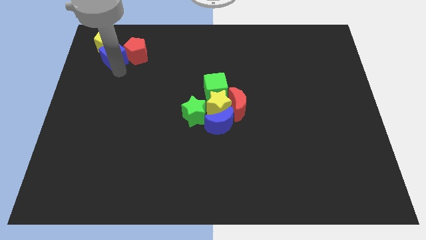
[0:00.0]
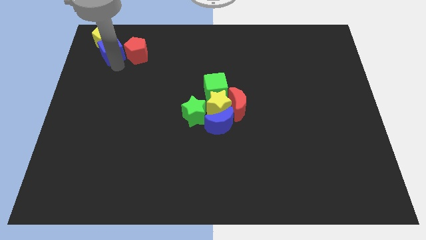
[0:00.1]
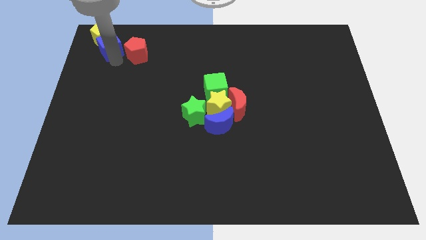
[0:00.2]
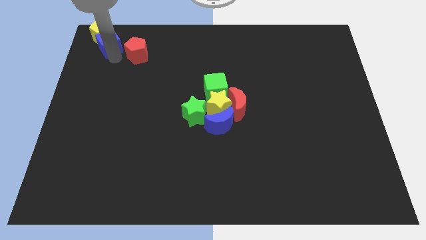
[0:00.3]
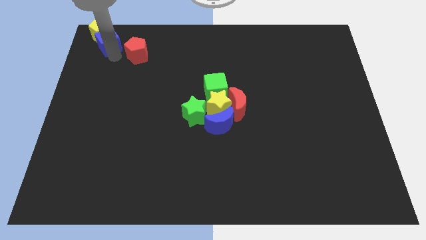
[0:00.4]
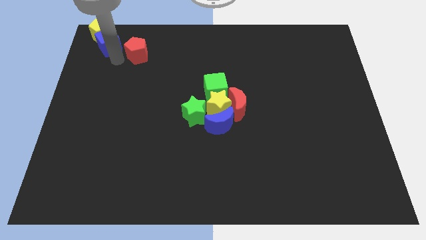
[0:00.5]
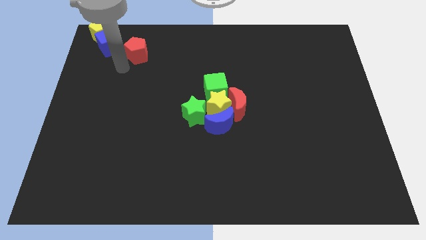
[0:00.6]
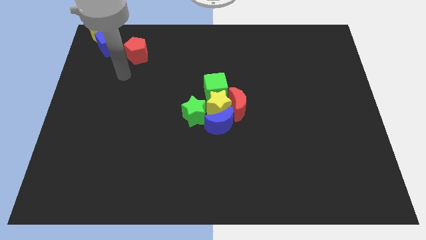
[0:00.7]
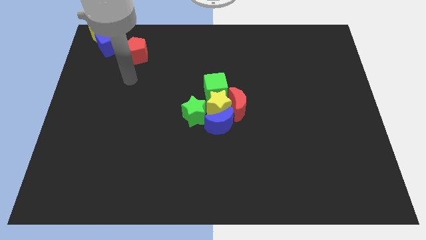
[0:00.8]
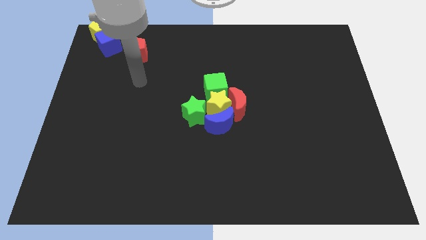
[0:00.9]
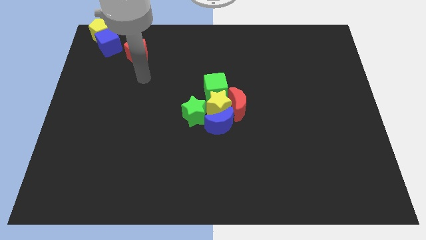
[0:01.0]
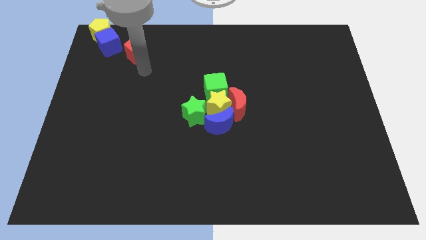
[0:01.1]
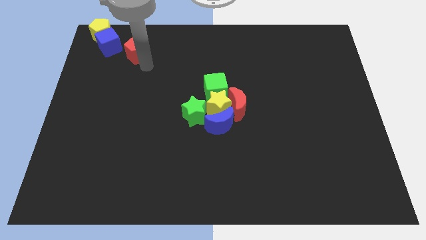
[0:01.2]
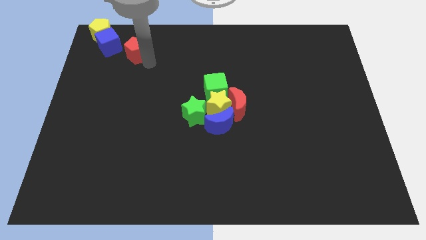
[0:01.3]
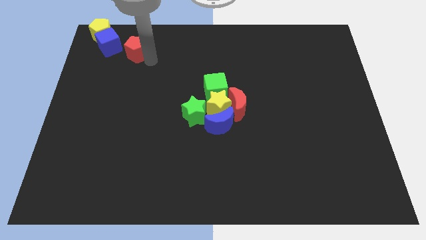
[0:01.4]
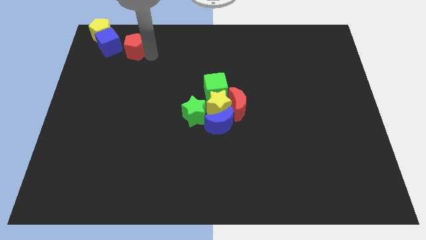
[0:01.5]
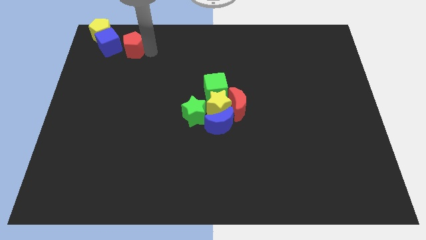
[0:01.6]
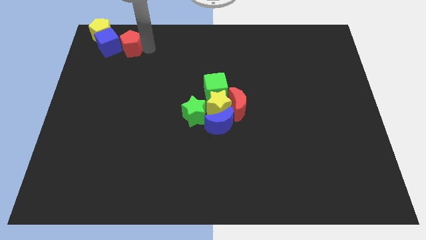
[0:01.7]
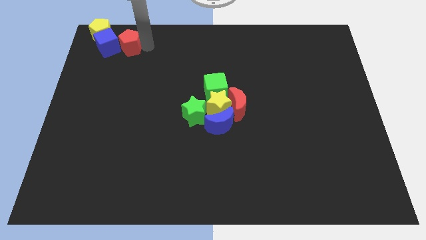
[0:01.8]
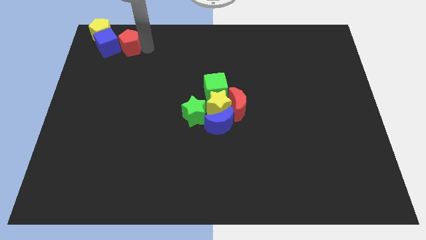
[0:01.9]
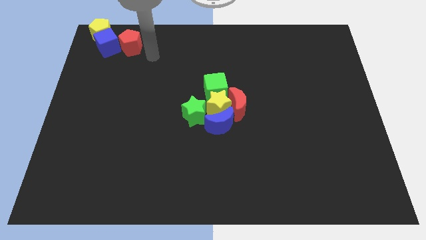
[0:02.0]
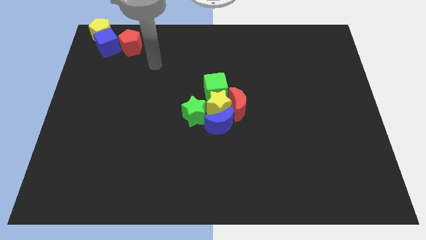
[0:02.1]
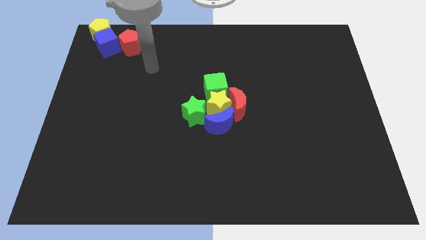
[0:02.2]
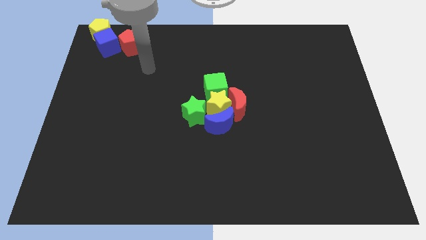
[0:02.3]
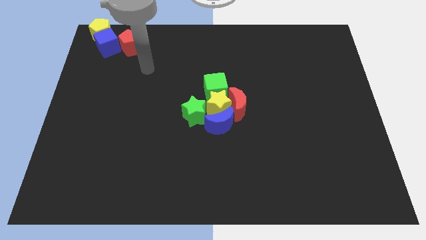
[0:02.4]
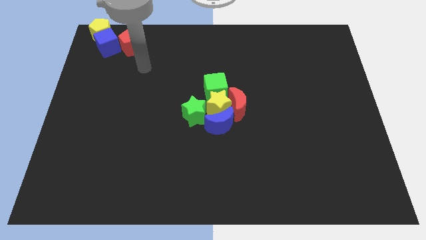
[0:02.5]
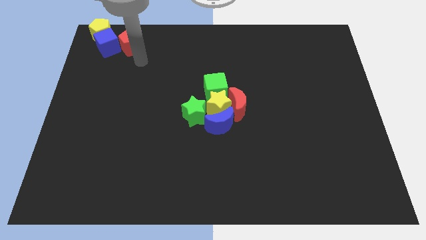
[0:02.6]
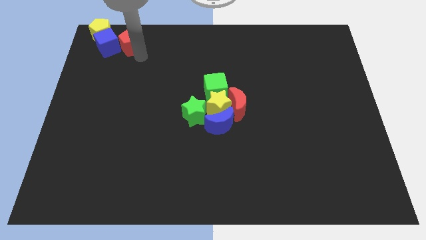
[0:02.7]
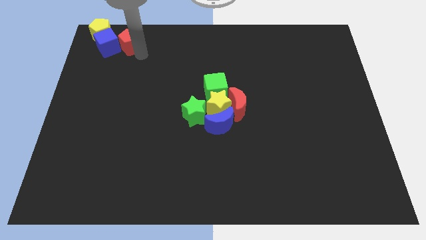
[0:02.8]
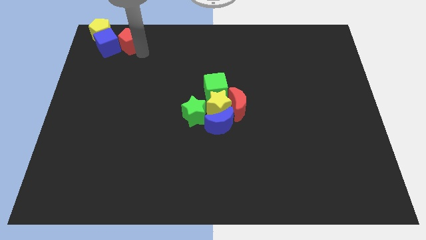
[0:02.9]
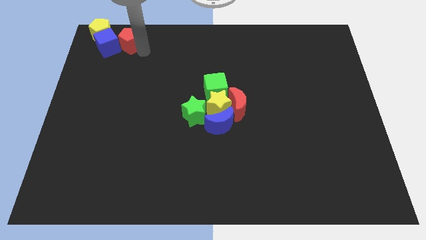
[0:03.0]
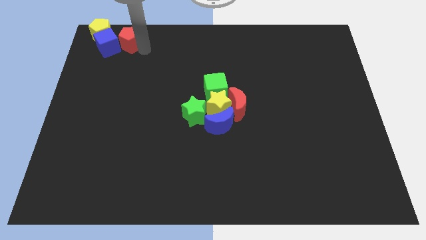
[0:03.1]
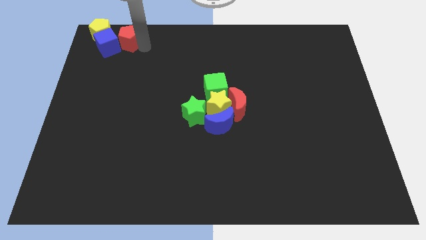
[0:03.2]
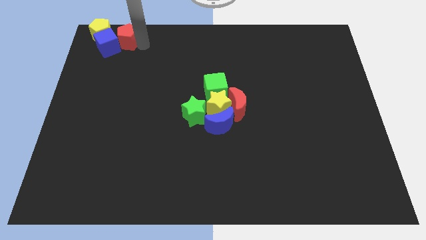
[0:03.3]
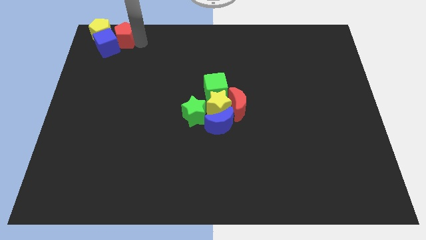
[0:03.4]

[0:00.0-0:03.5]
place the red pentagon to the right of blue cube

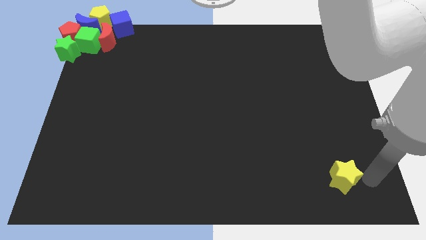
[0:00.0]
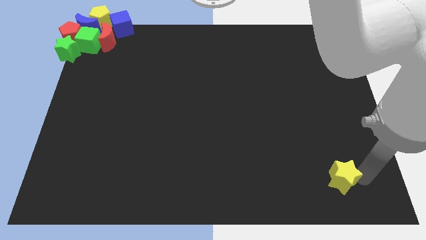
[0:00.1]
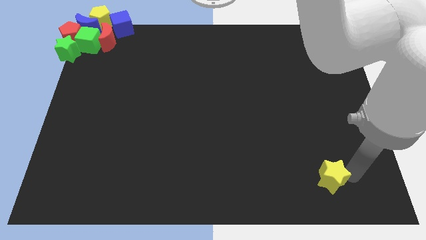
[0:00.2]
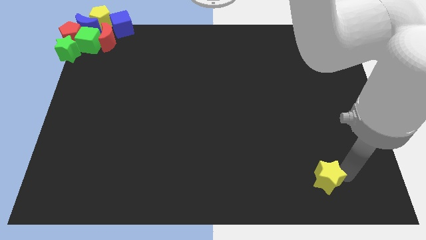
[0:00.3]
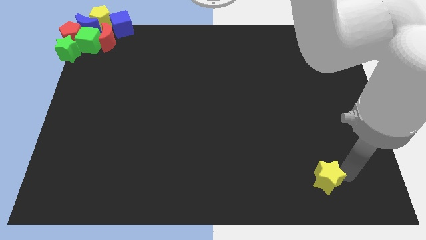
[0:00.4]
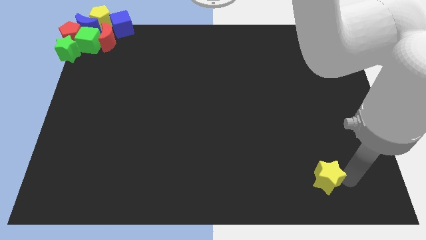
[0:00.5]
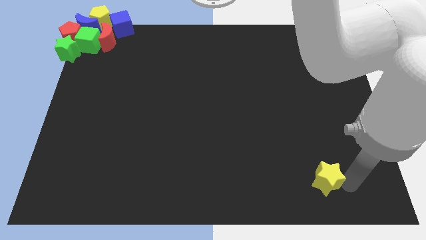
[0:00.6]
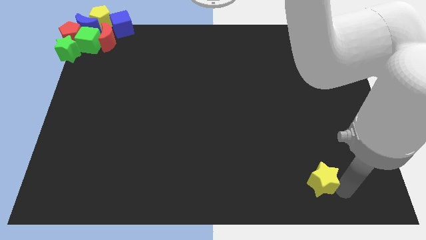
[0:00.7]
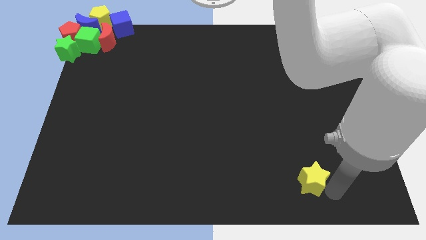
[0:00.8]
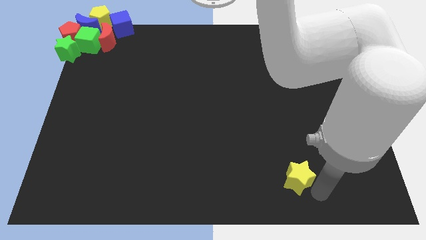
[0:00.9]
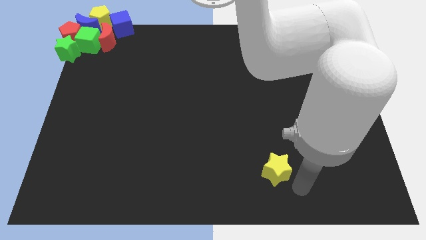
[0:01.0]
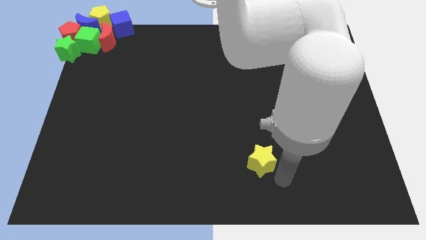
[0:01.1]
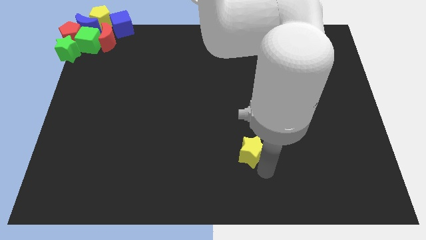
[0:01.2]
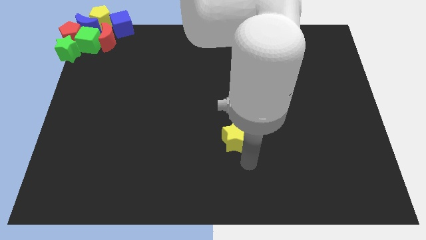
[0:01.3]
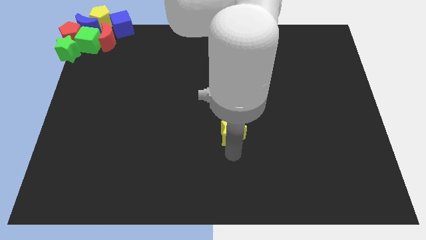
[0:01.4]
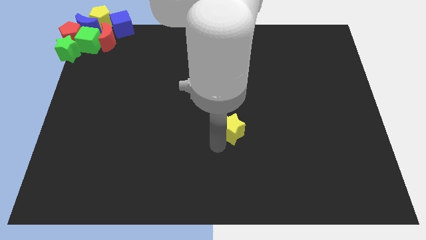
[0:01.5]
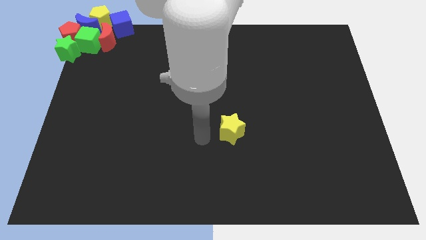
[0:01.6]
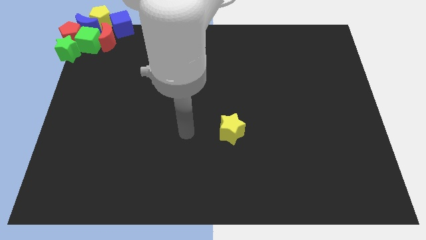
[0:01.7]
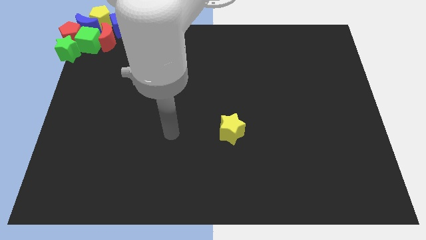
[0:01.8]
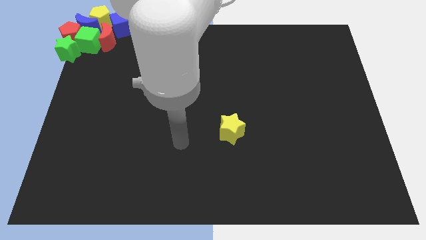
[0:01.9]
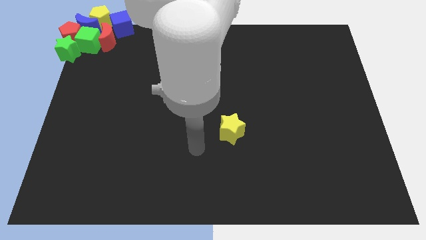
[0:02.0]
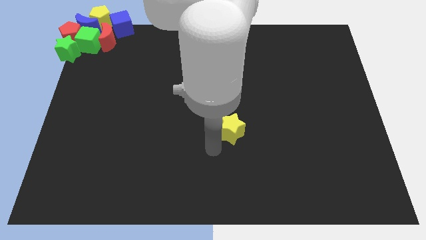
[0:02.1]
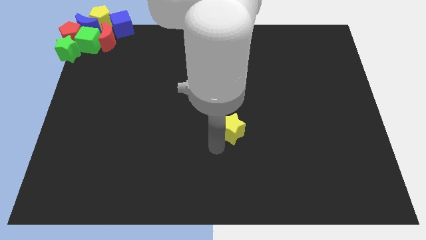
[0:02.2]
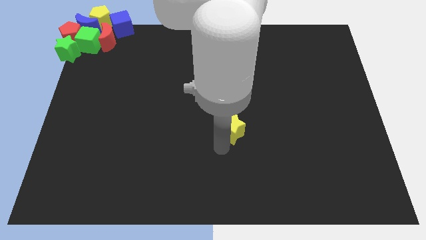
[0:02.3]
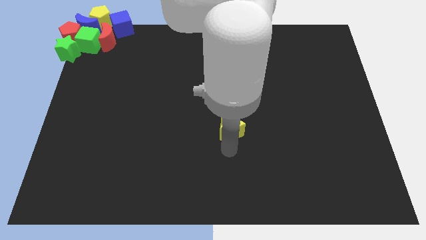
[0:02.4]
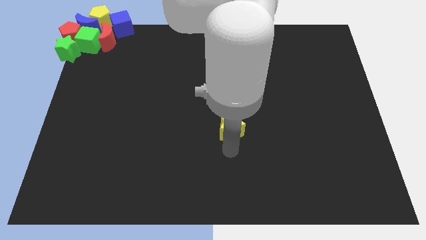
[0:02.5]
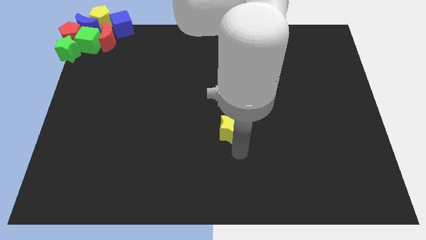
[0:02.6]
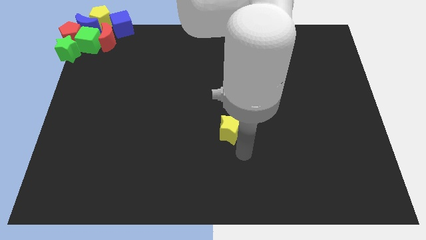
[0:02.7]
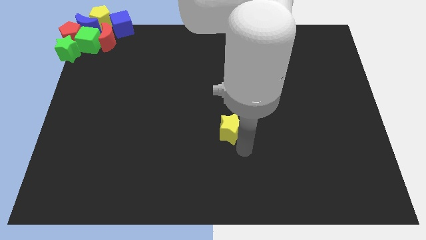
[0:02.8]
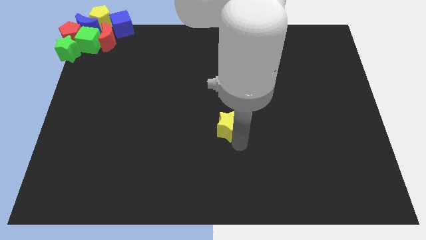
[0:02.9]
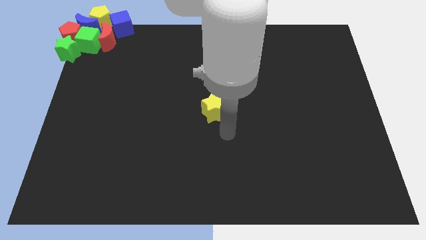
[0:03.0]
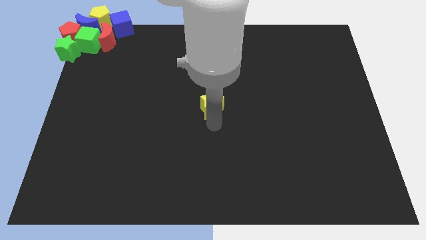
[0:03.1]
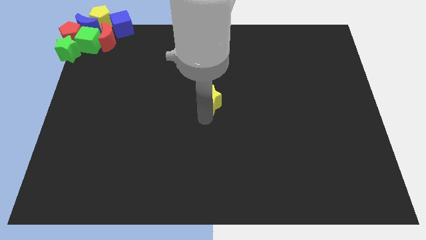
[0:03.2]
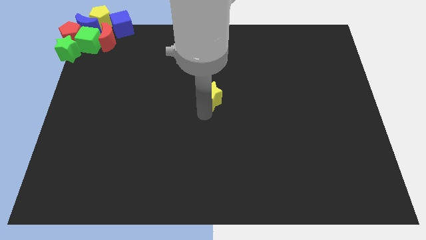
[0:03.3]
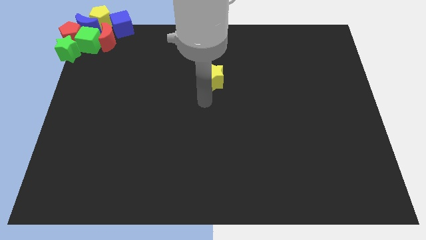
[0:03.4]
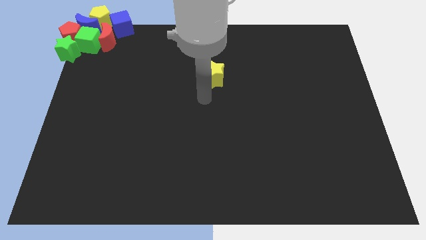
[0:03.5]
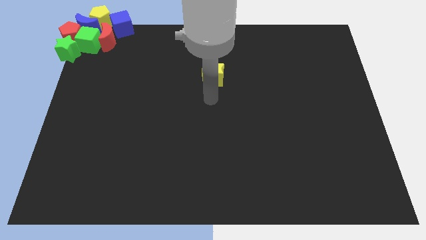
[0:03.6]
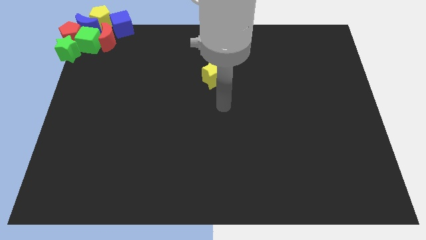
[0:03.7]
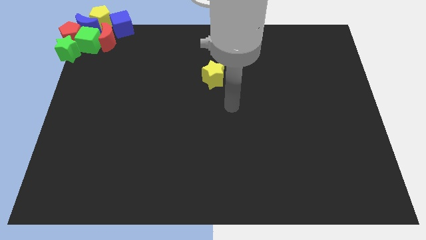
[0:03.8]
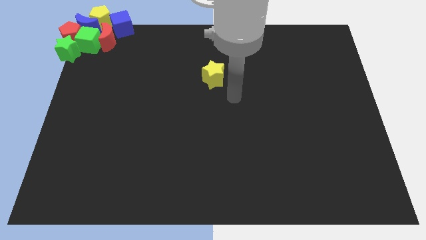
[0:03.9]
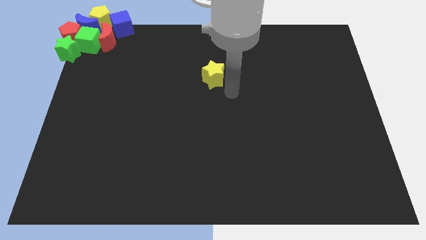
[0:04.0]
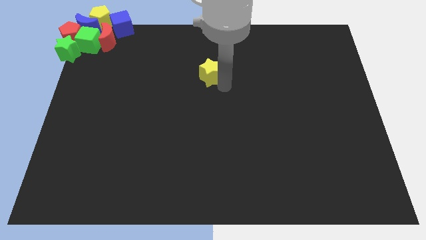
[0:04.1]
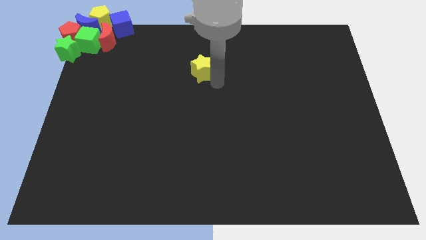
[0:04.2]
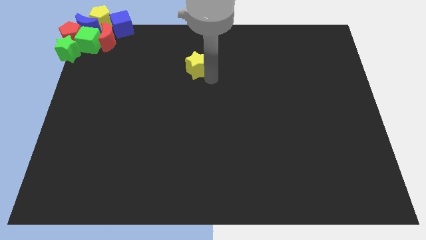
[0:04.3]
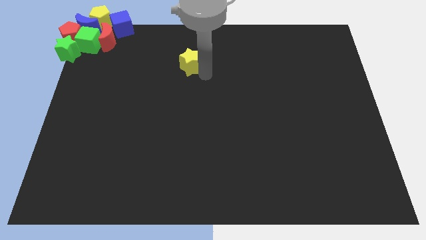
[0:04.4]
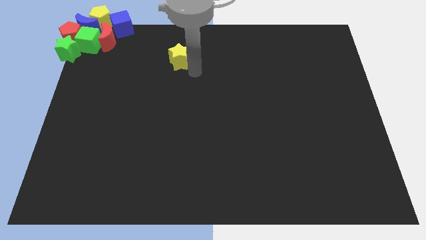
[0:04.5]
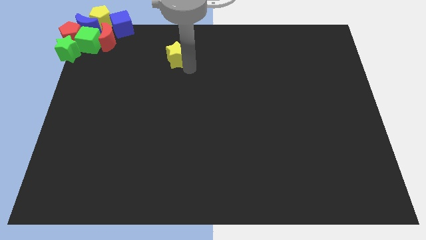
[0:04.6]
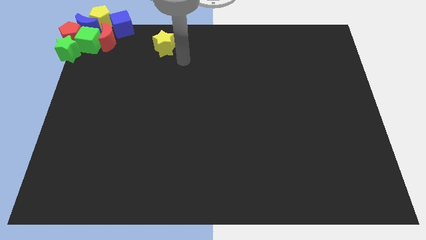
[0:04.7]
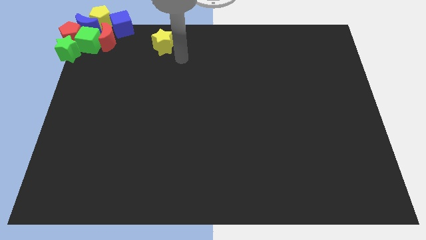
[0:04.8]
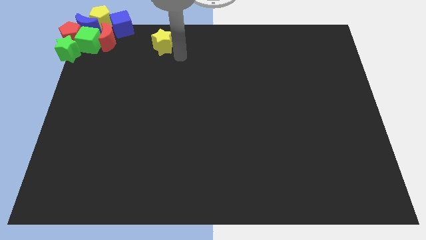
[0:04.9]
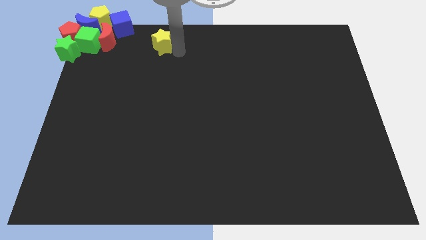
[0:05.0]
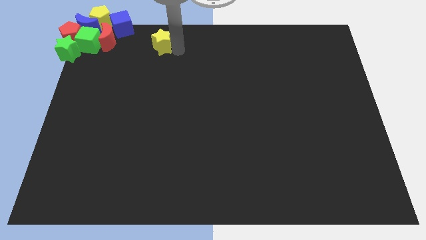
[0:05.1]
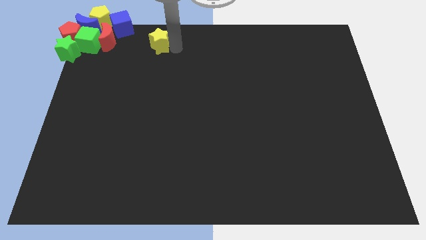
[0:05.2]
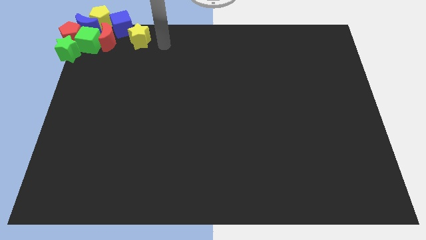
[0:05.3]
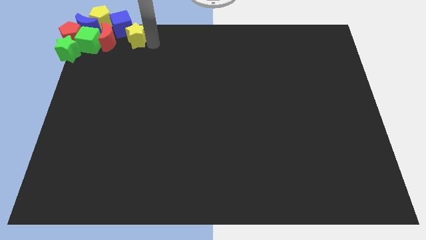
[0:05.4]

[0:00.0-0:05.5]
push the yellow star parallel right to the red crescent
